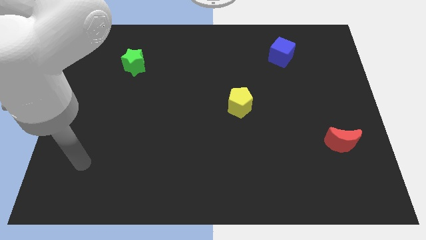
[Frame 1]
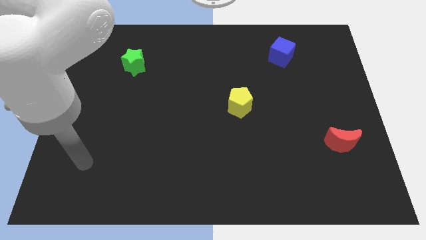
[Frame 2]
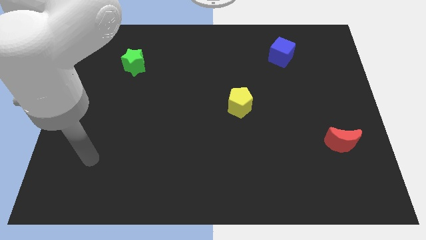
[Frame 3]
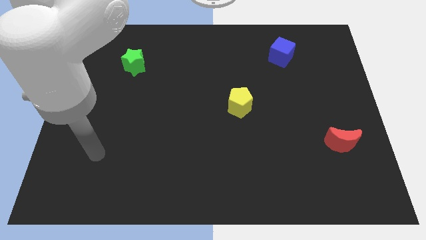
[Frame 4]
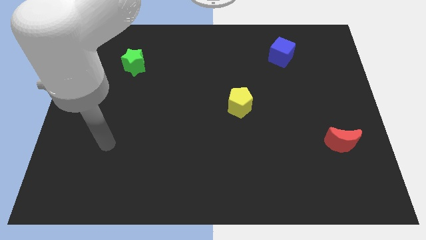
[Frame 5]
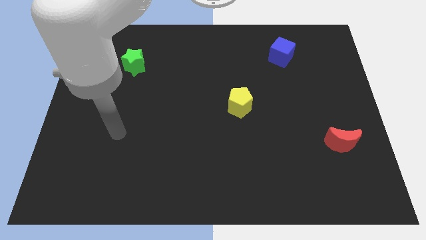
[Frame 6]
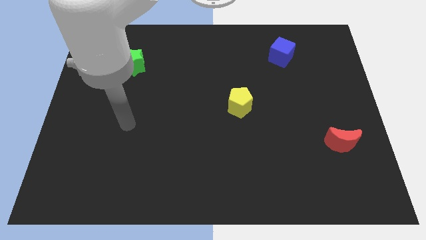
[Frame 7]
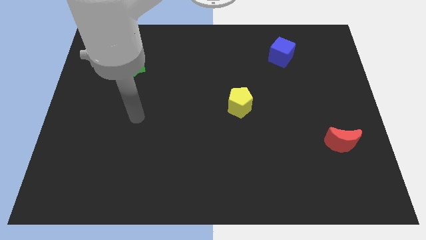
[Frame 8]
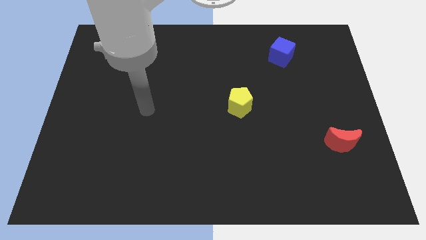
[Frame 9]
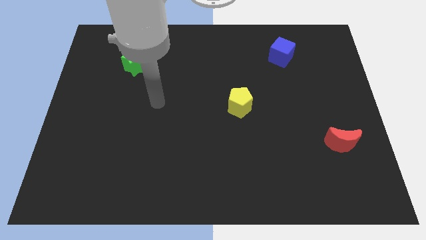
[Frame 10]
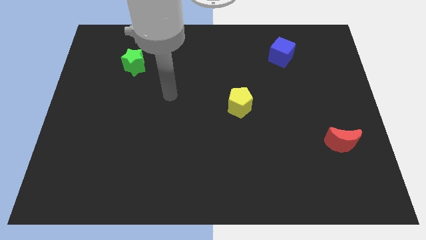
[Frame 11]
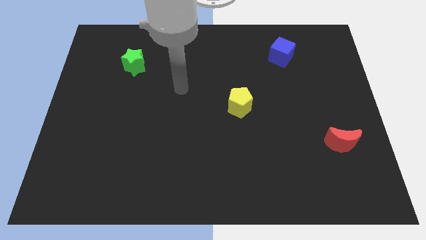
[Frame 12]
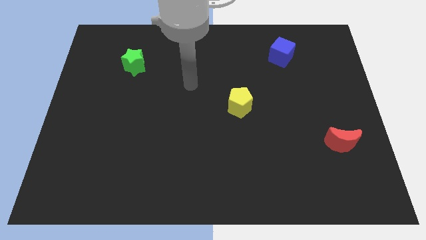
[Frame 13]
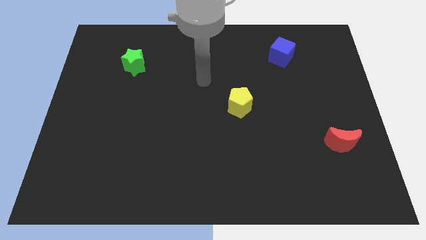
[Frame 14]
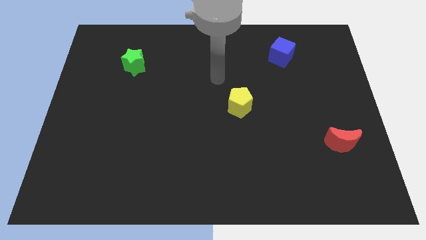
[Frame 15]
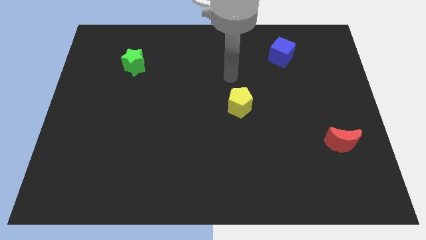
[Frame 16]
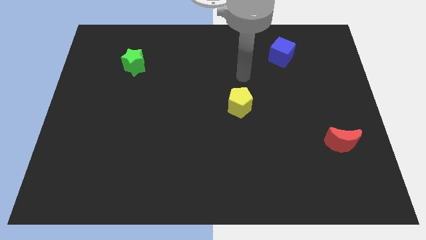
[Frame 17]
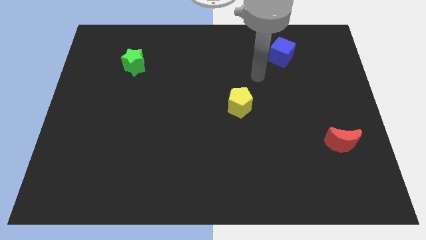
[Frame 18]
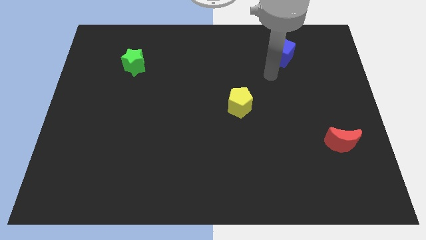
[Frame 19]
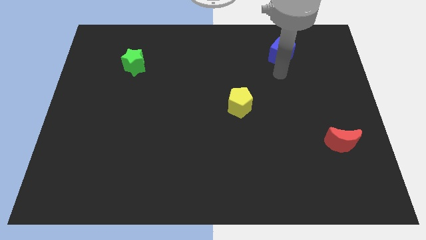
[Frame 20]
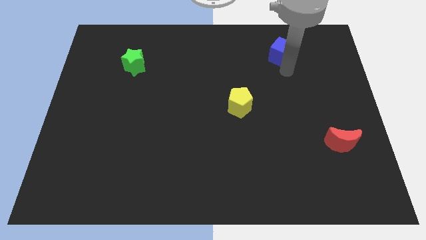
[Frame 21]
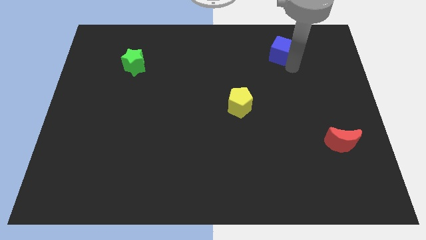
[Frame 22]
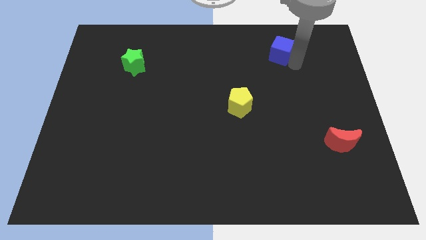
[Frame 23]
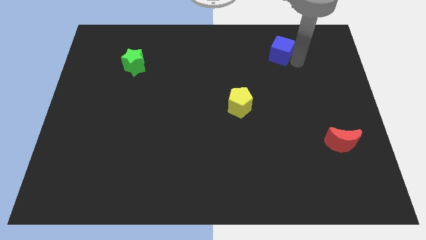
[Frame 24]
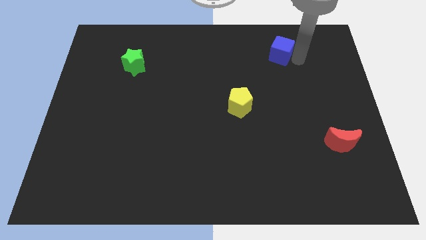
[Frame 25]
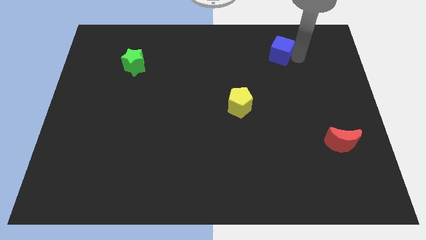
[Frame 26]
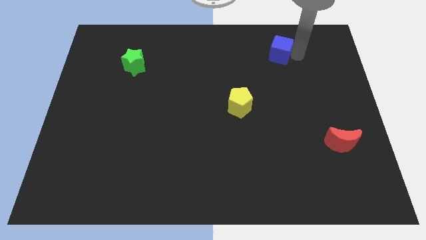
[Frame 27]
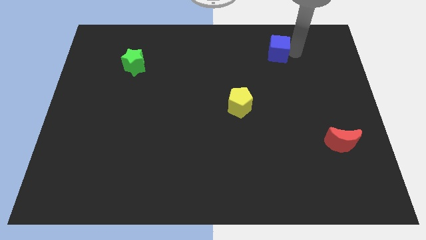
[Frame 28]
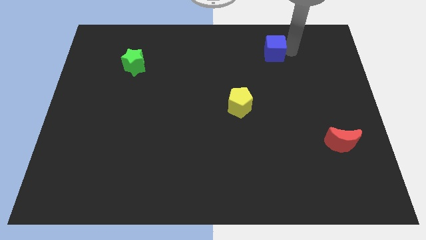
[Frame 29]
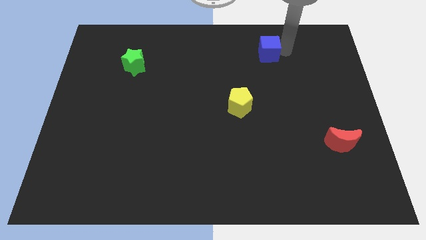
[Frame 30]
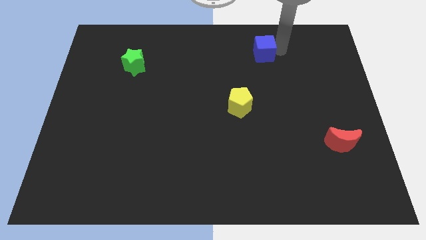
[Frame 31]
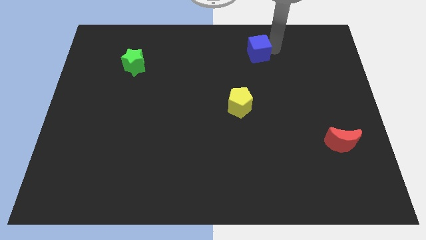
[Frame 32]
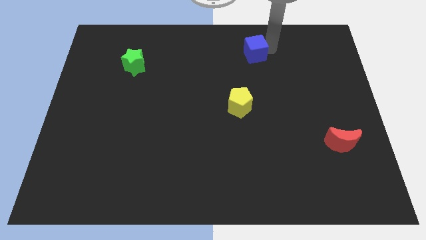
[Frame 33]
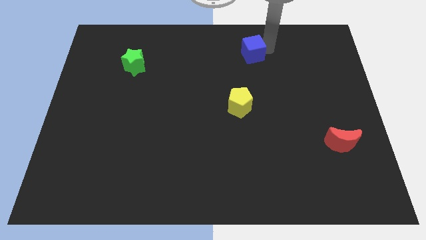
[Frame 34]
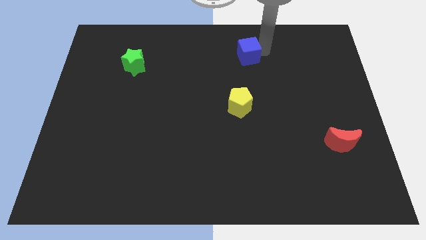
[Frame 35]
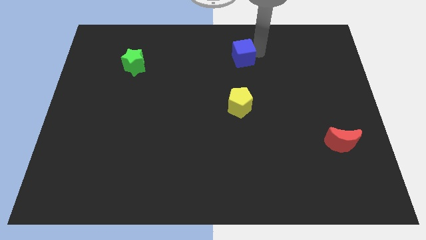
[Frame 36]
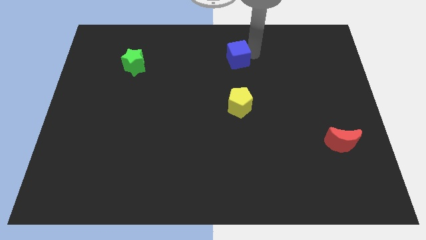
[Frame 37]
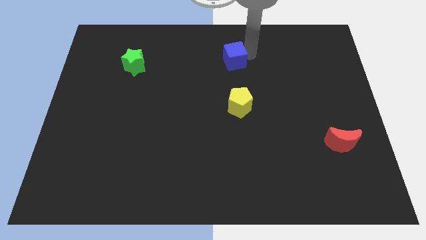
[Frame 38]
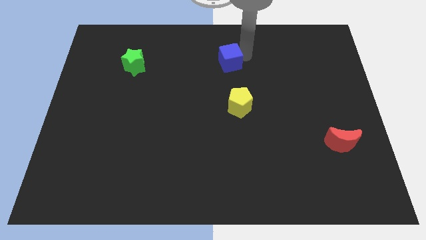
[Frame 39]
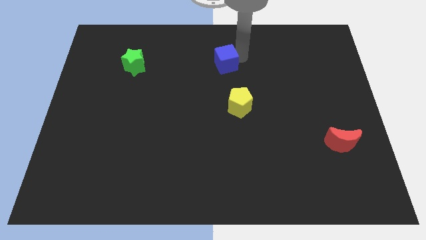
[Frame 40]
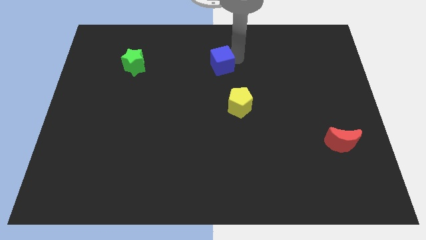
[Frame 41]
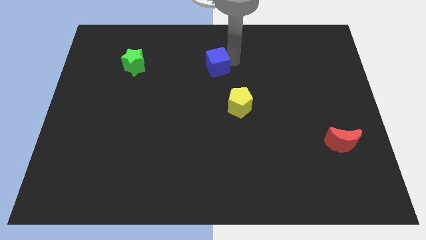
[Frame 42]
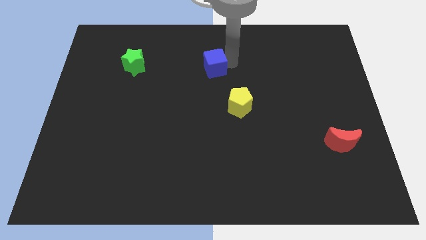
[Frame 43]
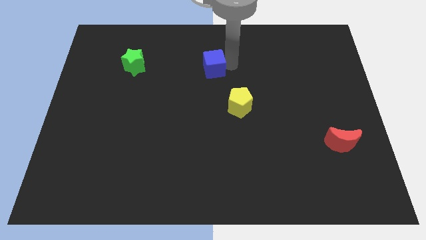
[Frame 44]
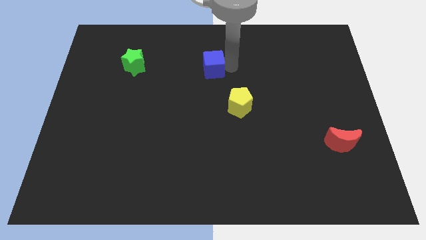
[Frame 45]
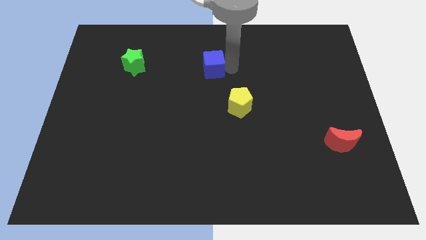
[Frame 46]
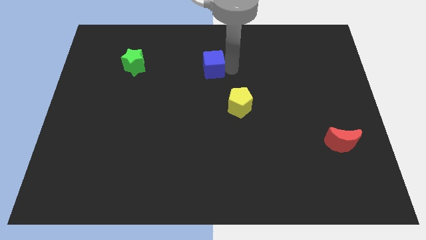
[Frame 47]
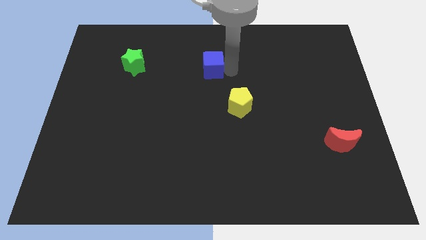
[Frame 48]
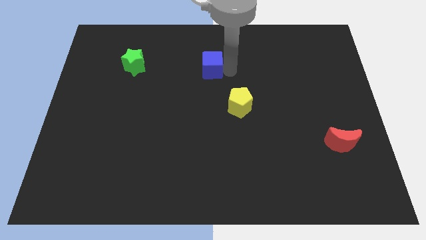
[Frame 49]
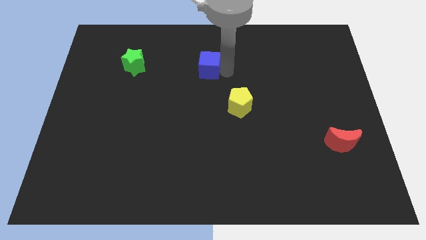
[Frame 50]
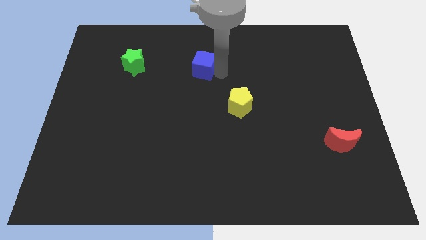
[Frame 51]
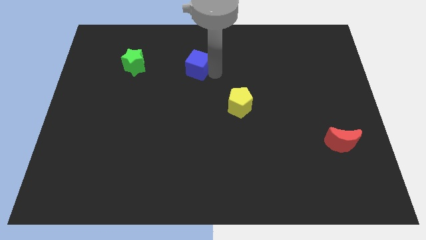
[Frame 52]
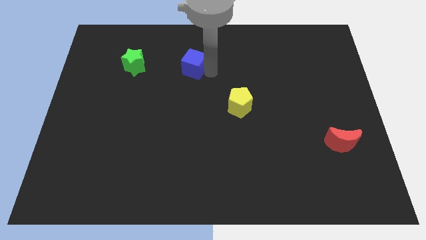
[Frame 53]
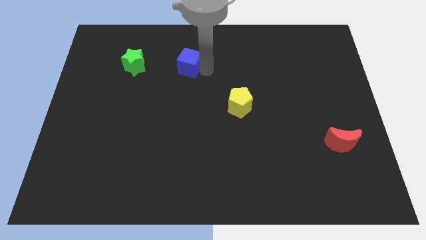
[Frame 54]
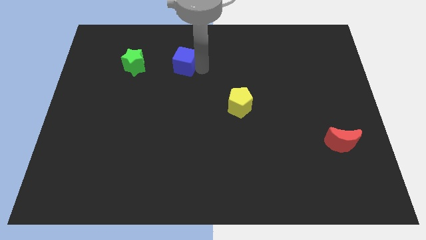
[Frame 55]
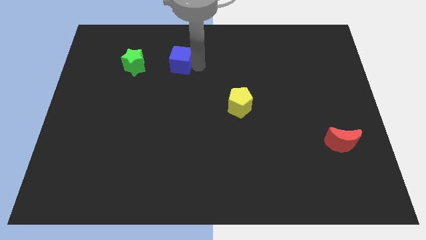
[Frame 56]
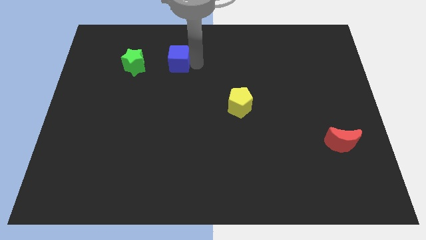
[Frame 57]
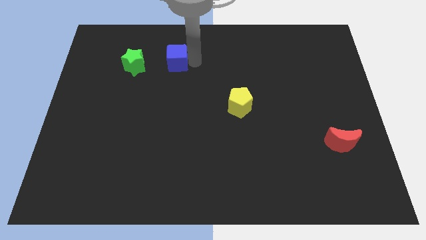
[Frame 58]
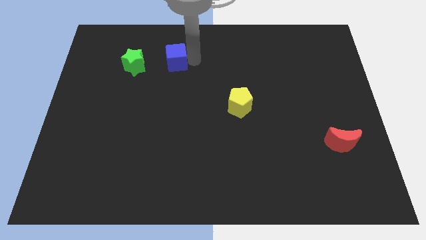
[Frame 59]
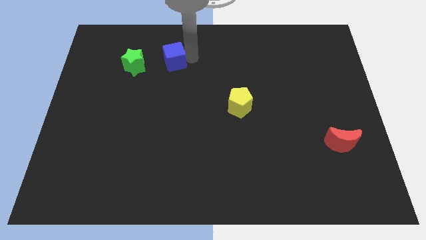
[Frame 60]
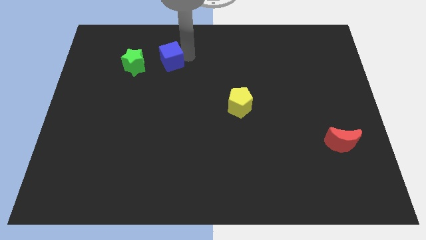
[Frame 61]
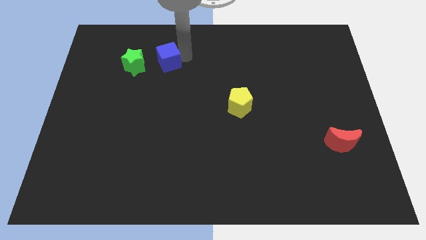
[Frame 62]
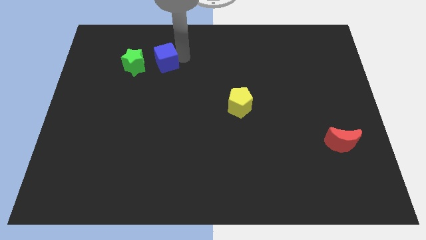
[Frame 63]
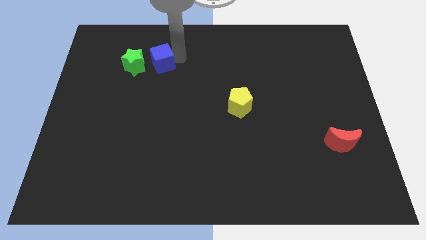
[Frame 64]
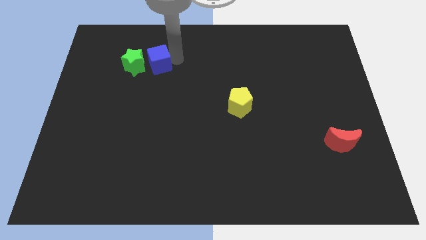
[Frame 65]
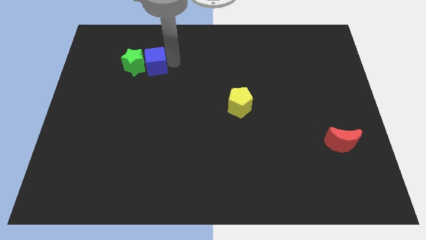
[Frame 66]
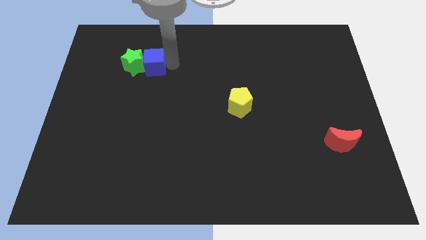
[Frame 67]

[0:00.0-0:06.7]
put the cube next to the green star

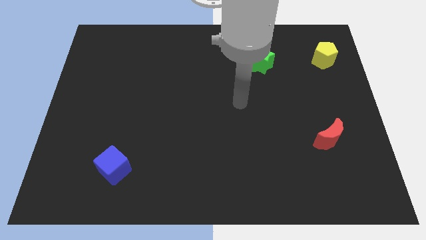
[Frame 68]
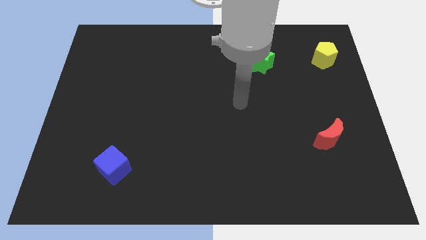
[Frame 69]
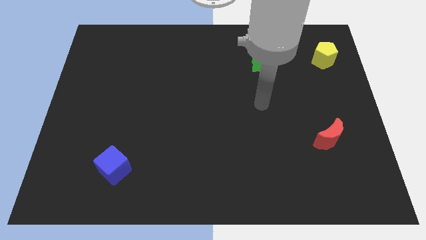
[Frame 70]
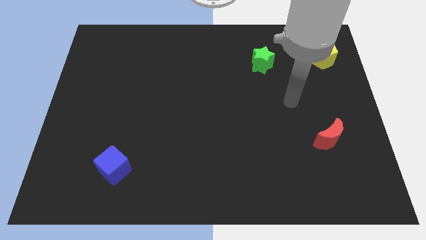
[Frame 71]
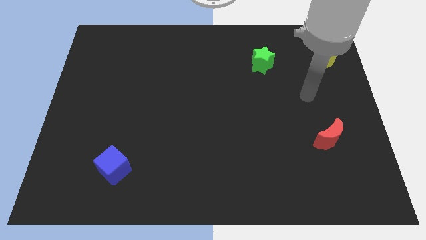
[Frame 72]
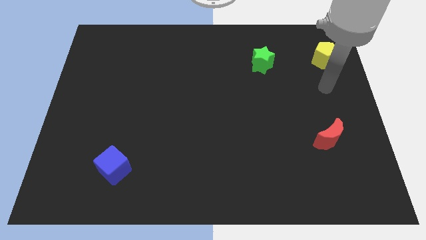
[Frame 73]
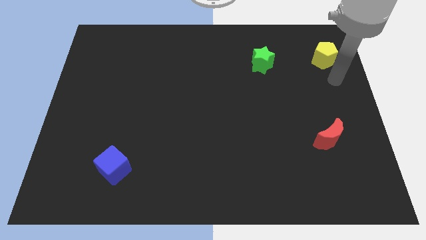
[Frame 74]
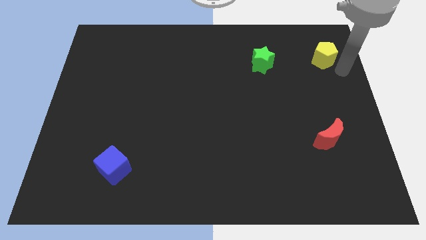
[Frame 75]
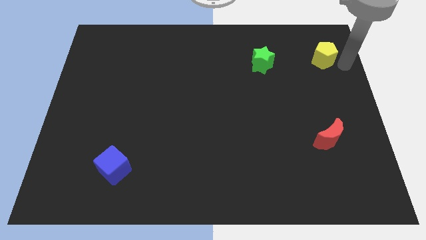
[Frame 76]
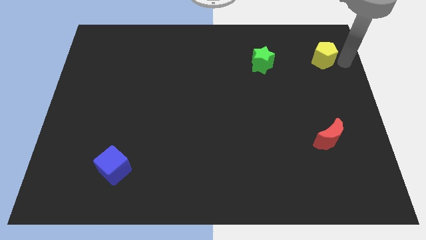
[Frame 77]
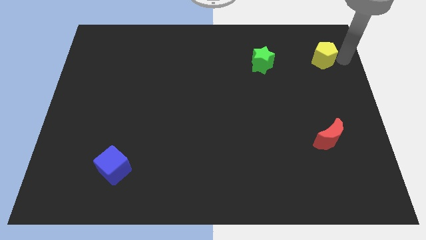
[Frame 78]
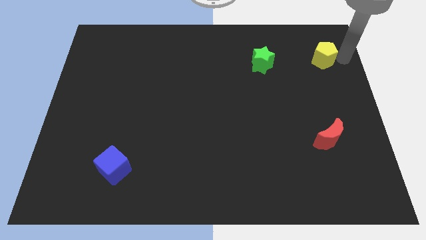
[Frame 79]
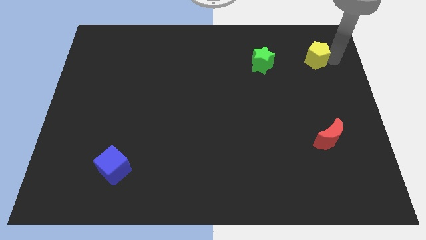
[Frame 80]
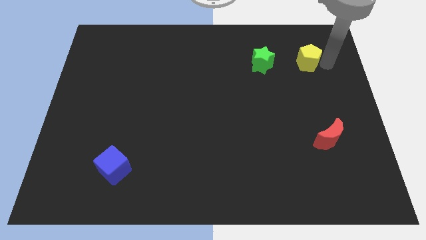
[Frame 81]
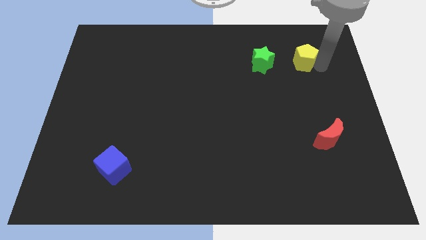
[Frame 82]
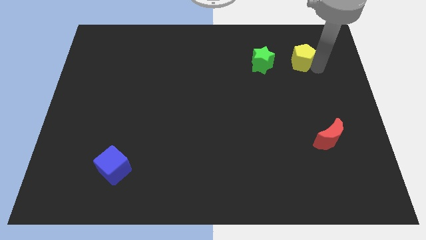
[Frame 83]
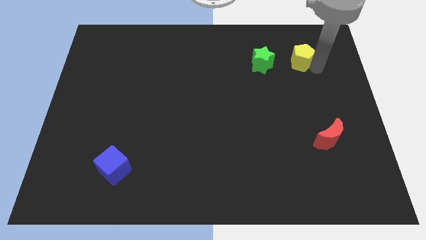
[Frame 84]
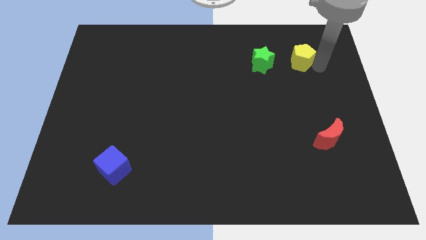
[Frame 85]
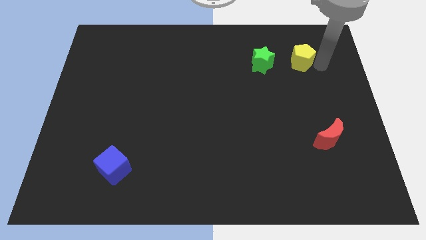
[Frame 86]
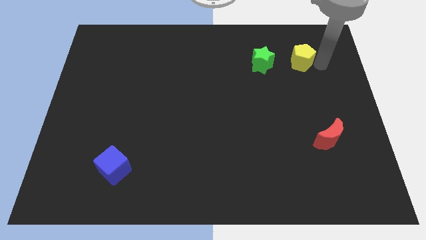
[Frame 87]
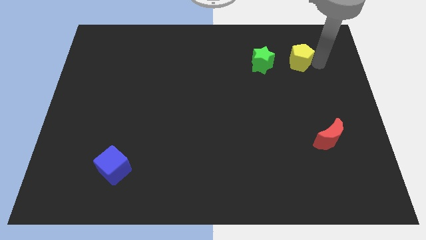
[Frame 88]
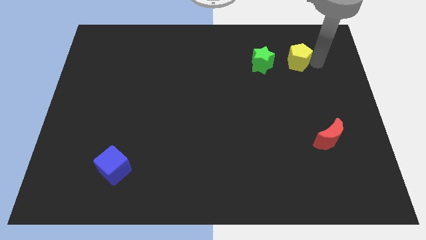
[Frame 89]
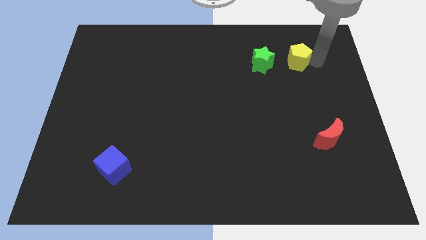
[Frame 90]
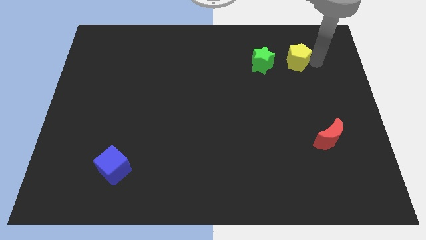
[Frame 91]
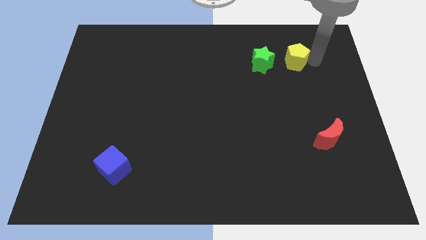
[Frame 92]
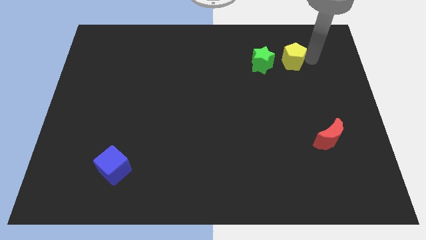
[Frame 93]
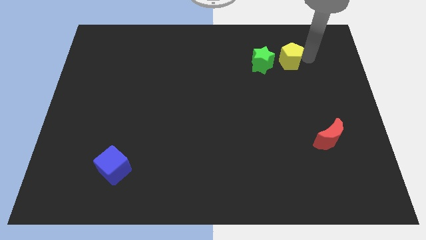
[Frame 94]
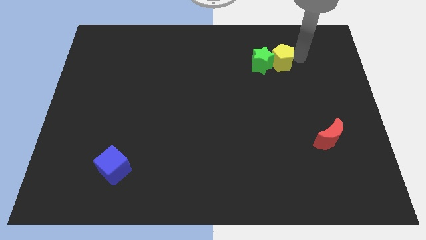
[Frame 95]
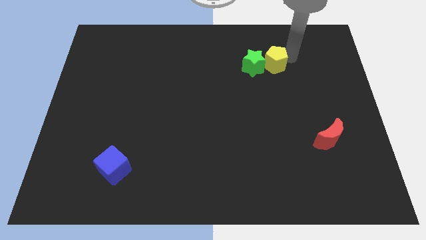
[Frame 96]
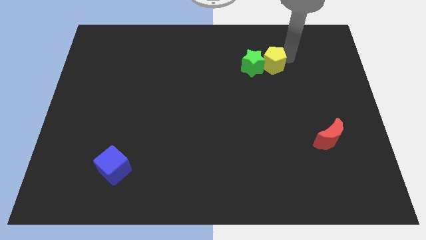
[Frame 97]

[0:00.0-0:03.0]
put the pentagon close to the green star
